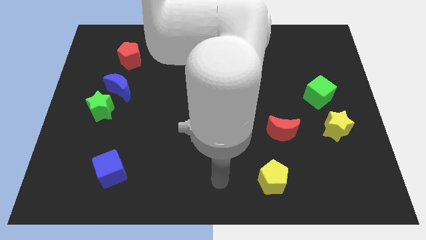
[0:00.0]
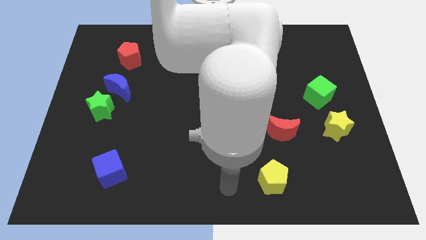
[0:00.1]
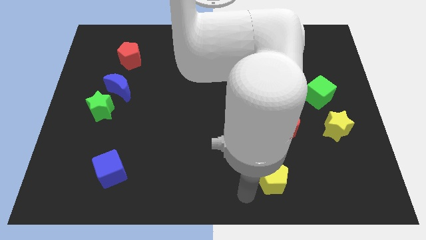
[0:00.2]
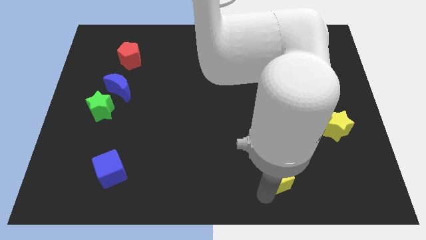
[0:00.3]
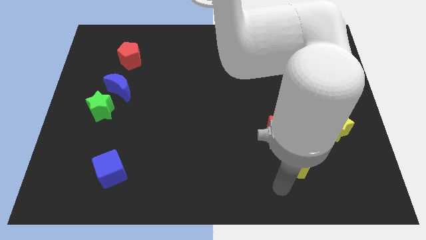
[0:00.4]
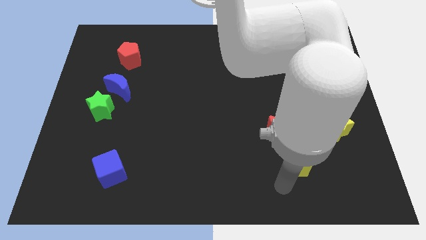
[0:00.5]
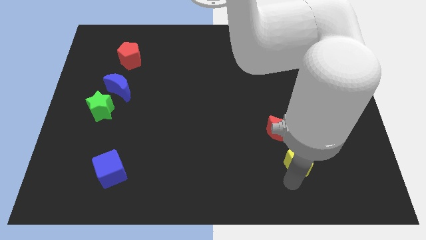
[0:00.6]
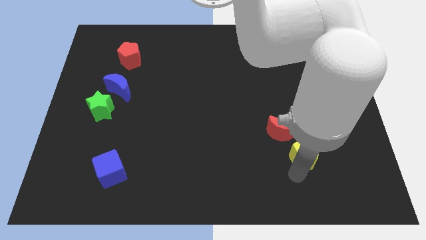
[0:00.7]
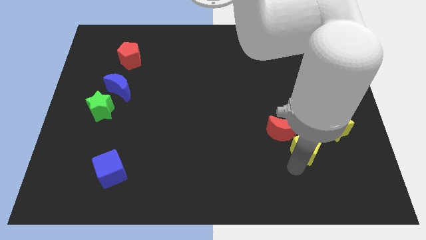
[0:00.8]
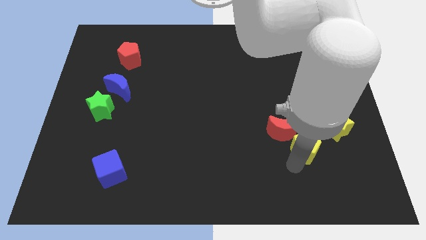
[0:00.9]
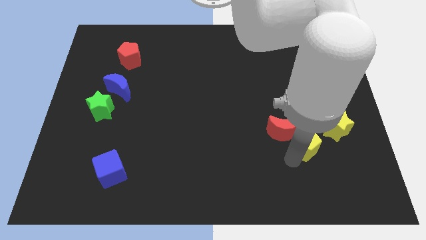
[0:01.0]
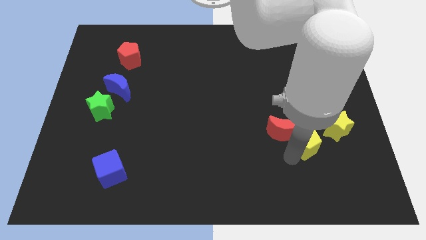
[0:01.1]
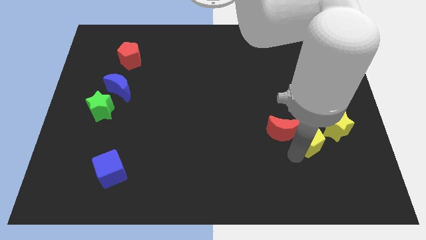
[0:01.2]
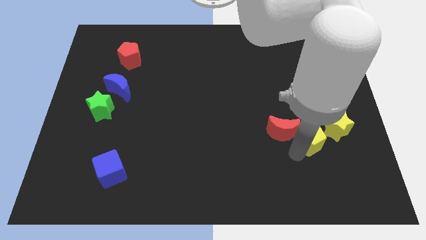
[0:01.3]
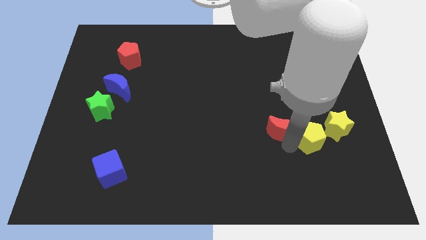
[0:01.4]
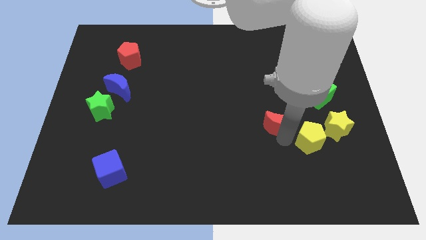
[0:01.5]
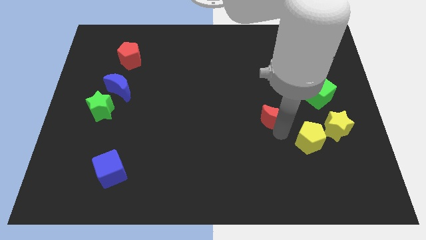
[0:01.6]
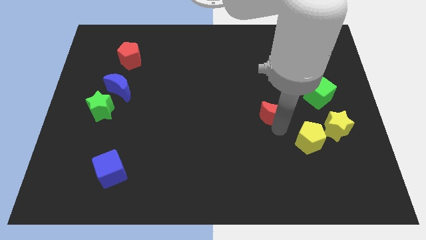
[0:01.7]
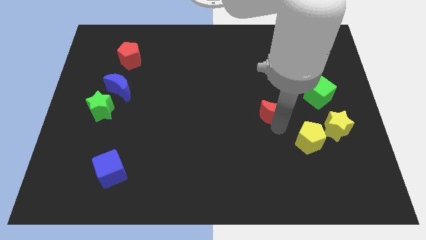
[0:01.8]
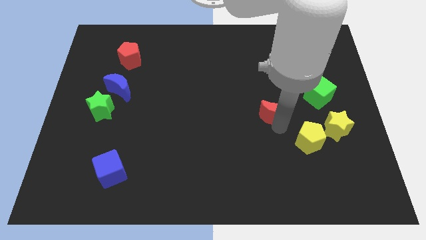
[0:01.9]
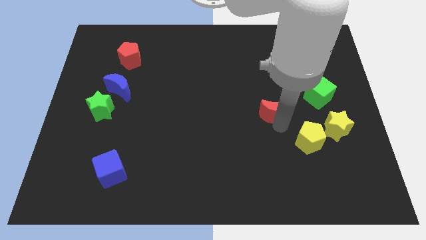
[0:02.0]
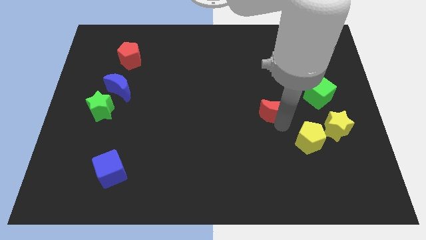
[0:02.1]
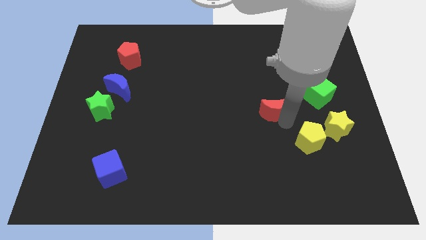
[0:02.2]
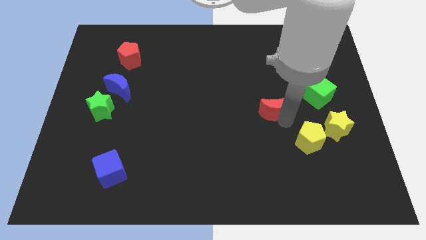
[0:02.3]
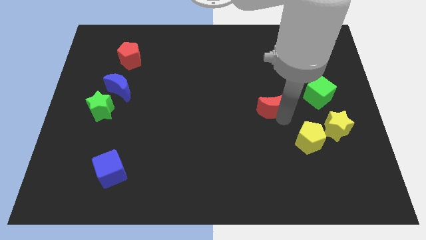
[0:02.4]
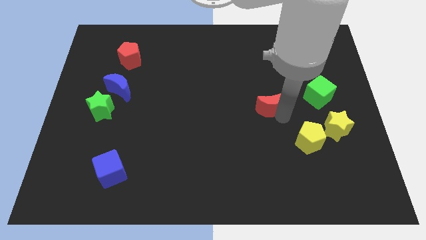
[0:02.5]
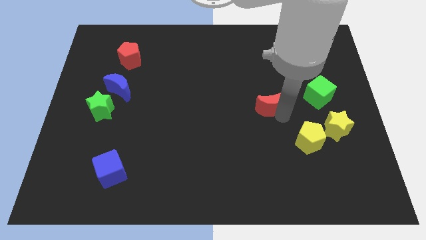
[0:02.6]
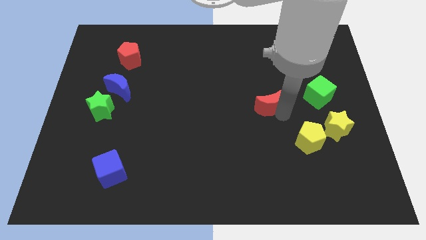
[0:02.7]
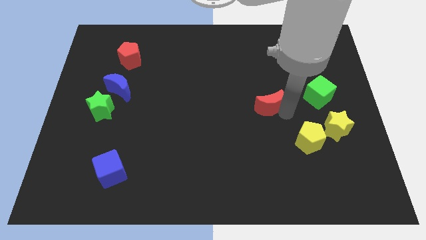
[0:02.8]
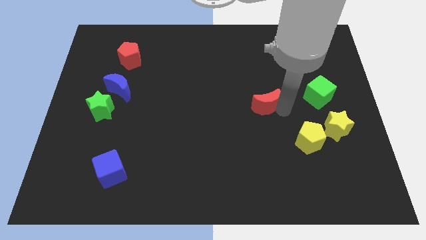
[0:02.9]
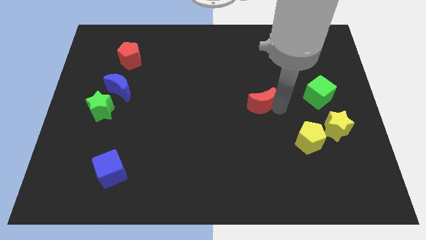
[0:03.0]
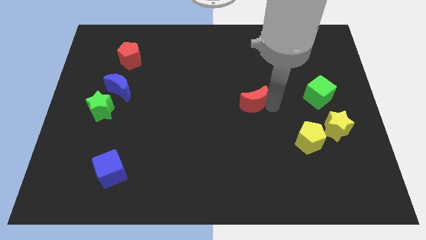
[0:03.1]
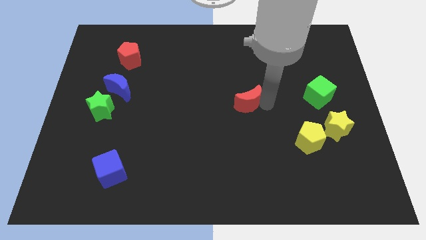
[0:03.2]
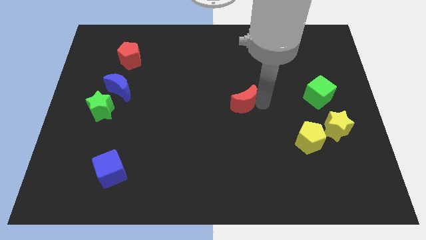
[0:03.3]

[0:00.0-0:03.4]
move the yellow pentagon and red crescent diagonal to each other

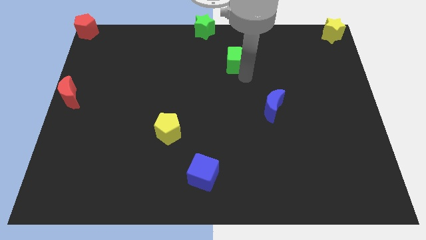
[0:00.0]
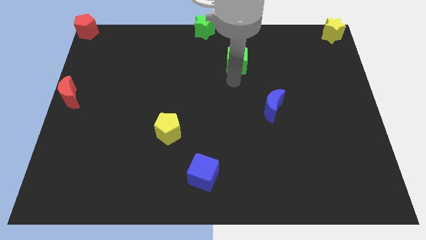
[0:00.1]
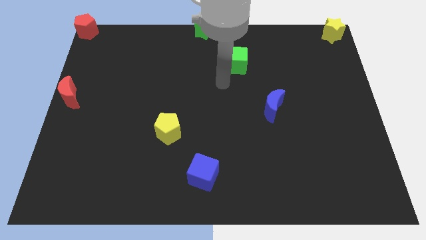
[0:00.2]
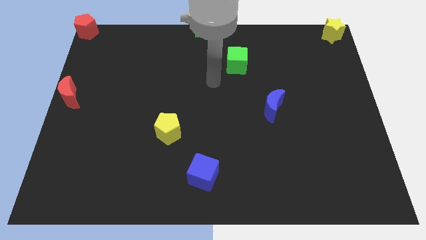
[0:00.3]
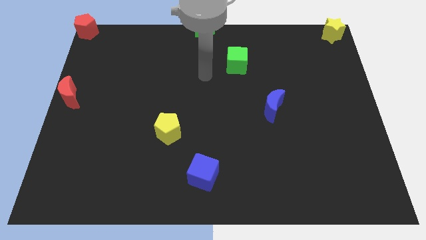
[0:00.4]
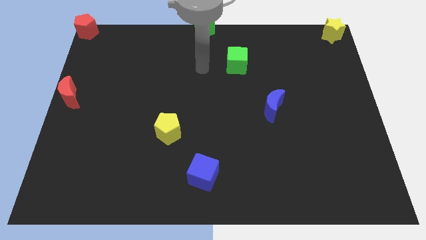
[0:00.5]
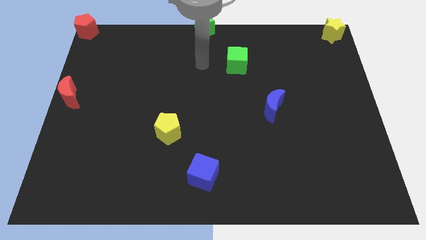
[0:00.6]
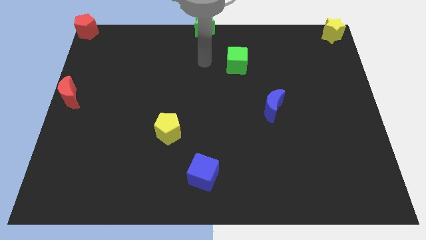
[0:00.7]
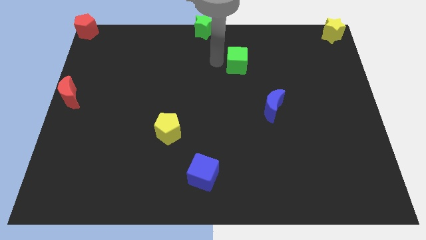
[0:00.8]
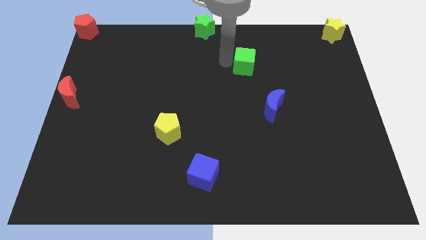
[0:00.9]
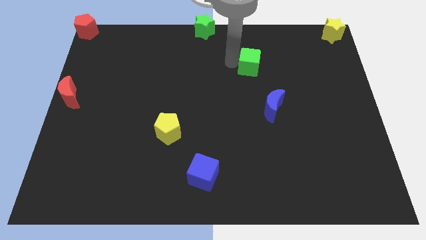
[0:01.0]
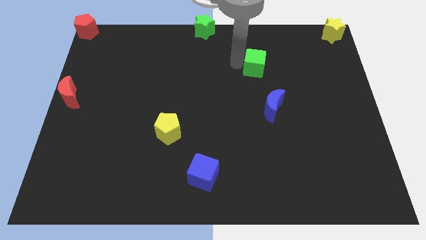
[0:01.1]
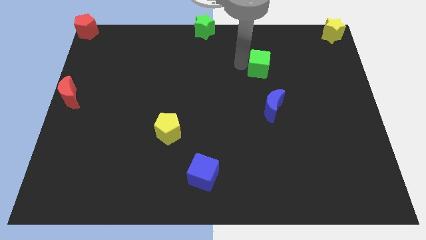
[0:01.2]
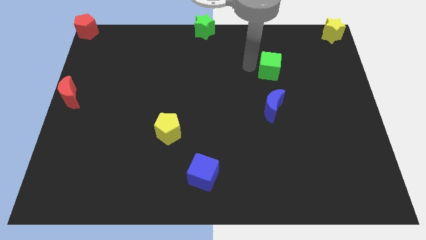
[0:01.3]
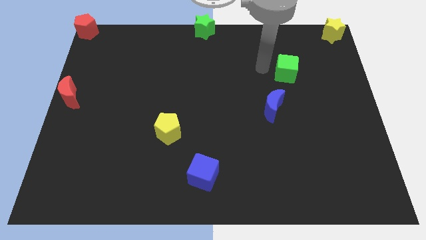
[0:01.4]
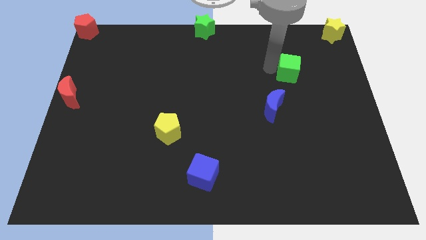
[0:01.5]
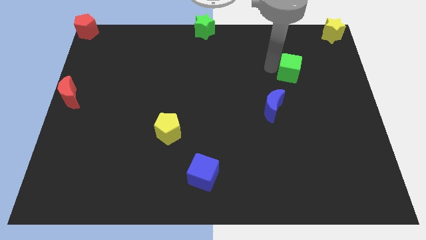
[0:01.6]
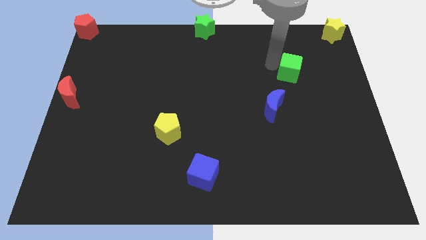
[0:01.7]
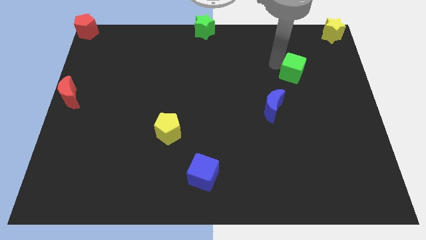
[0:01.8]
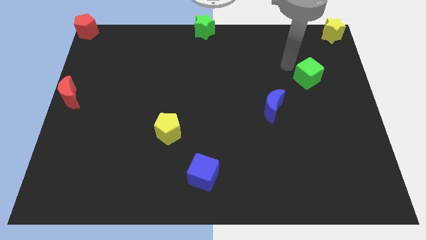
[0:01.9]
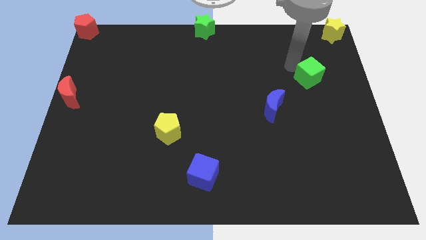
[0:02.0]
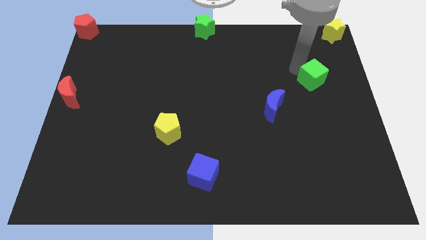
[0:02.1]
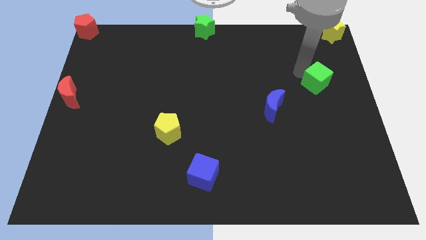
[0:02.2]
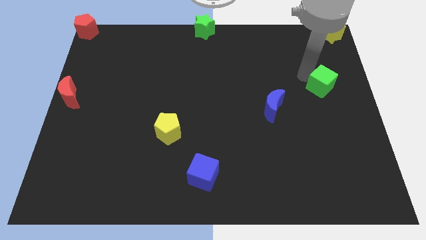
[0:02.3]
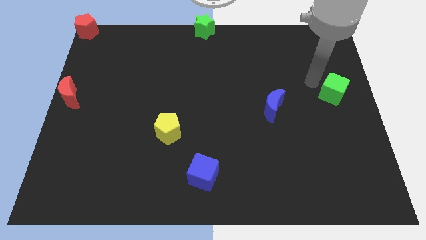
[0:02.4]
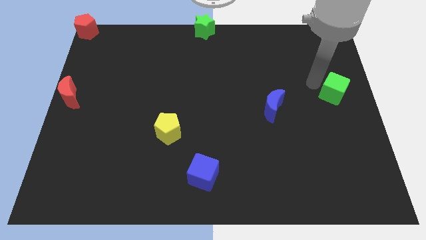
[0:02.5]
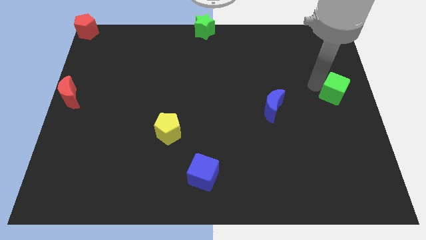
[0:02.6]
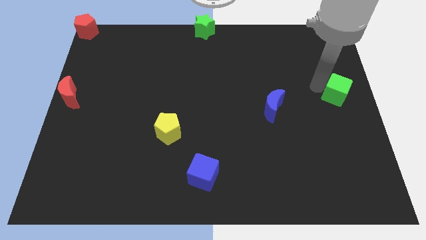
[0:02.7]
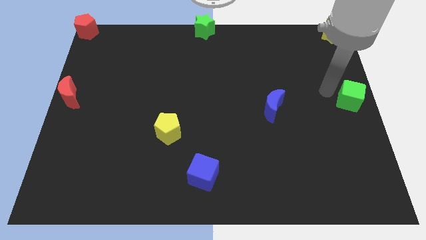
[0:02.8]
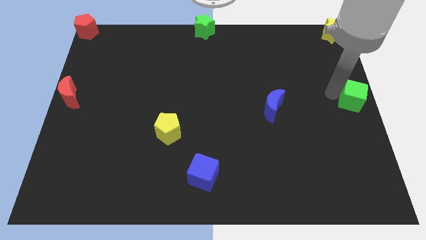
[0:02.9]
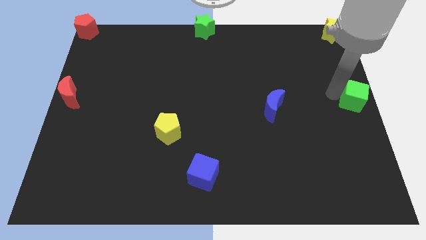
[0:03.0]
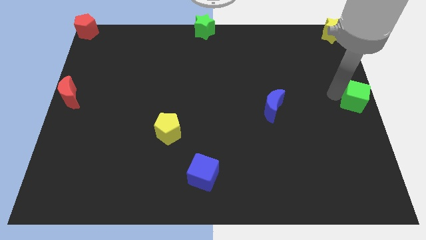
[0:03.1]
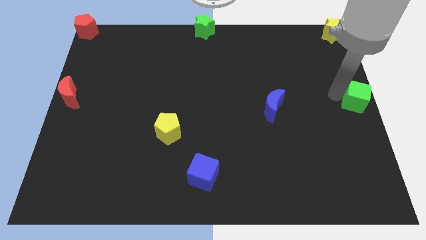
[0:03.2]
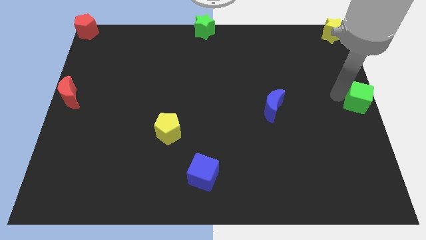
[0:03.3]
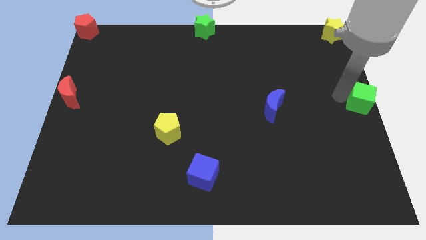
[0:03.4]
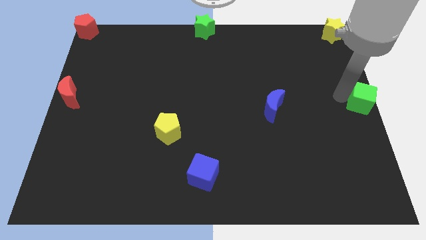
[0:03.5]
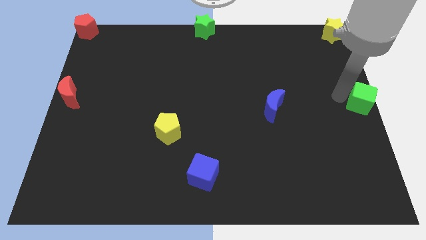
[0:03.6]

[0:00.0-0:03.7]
place green cube below yellow star

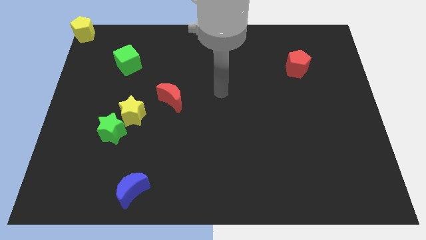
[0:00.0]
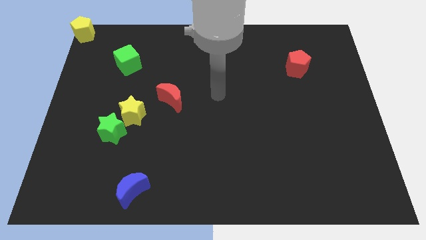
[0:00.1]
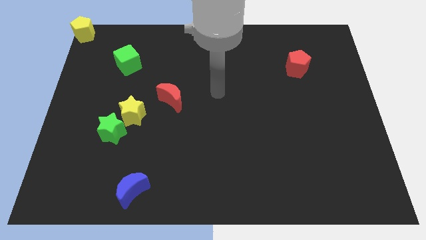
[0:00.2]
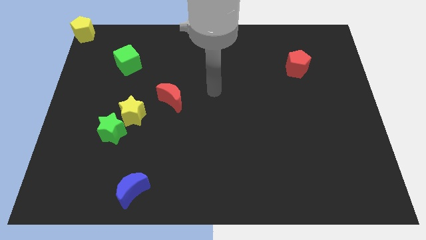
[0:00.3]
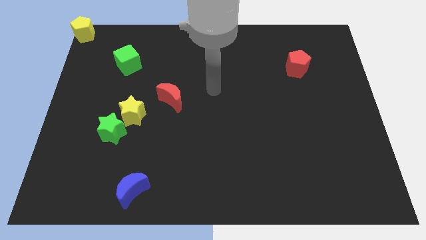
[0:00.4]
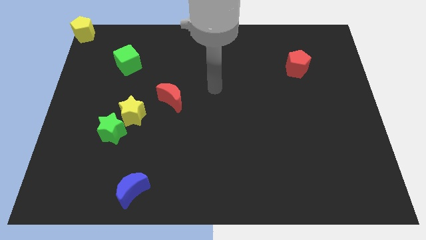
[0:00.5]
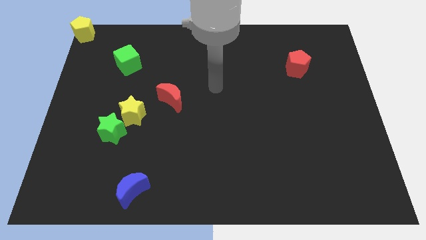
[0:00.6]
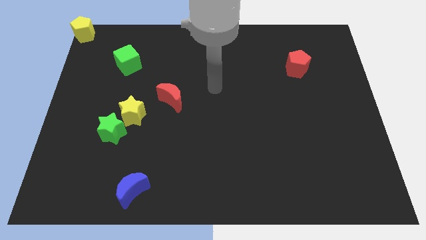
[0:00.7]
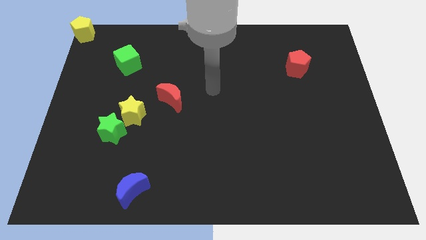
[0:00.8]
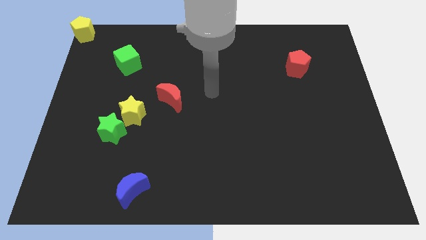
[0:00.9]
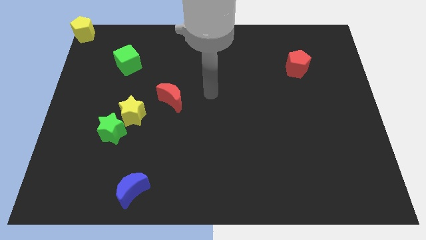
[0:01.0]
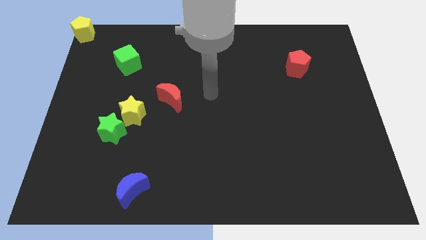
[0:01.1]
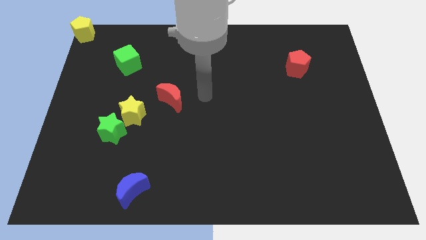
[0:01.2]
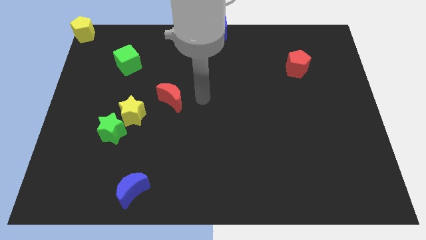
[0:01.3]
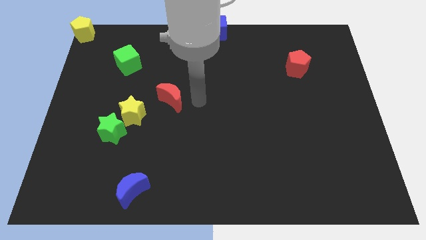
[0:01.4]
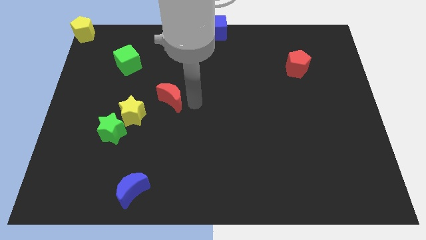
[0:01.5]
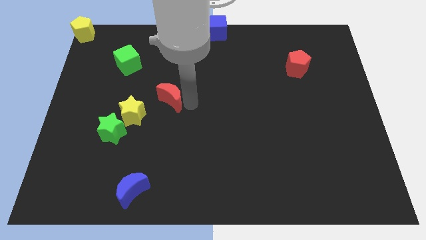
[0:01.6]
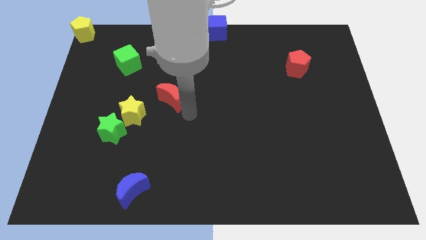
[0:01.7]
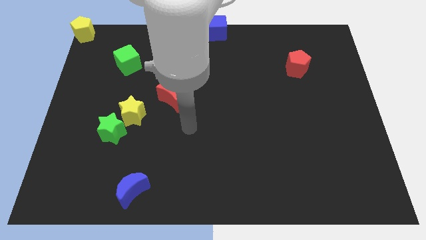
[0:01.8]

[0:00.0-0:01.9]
point your hand at the bottom side of the red crescent

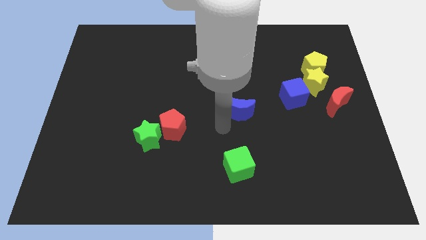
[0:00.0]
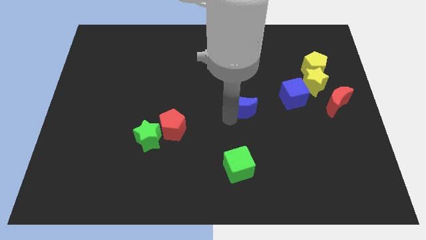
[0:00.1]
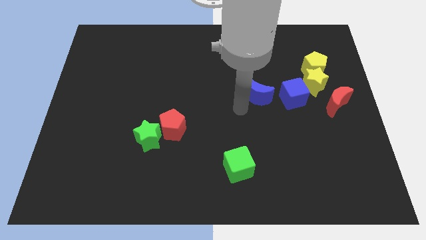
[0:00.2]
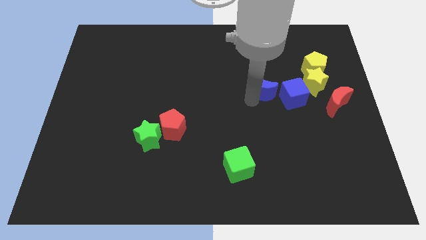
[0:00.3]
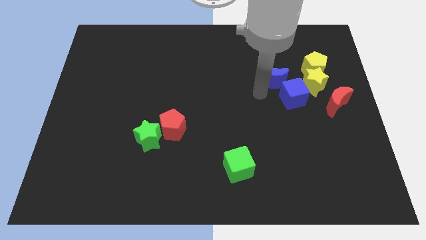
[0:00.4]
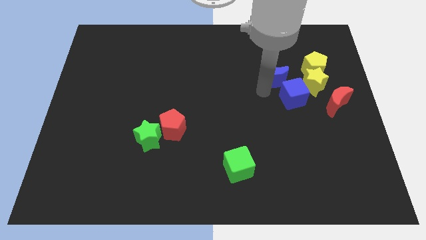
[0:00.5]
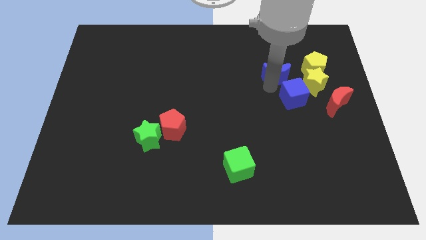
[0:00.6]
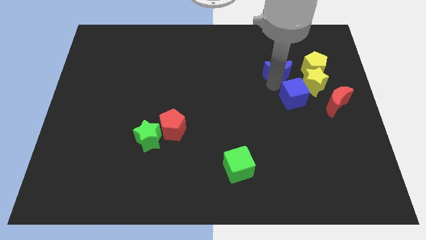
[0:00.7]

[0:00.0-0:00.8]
place the blue moon above the blue cube
